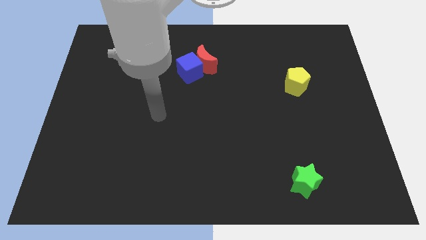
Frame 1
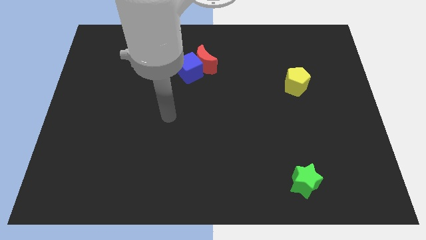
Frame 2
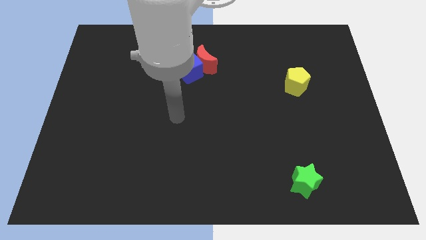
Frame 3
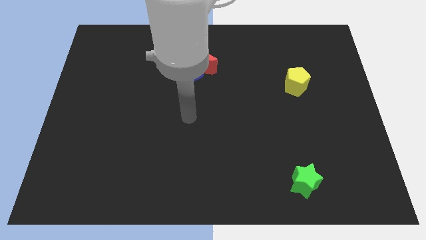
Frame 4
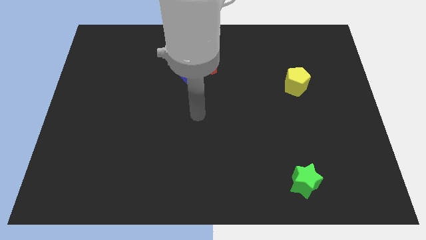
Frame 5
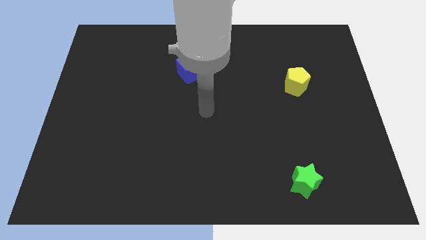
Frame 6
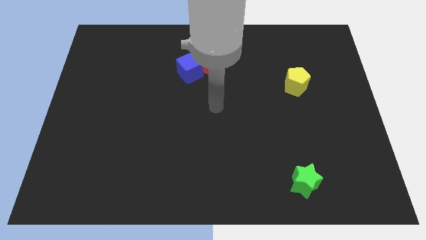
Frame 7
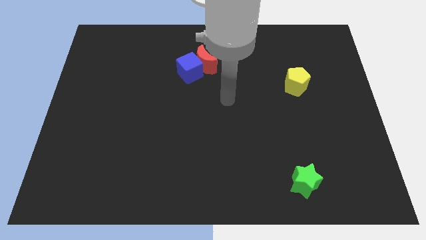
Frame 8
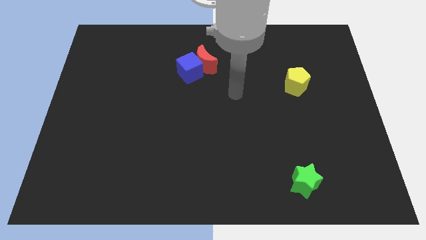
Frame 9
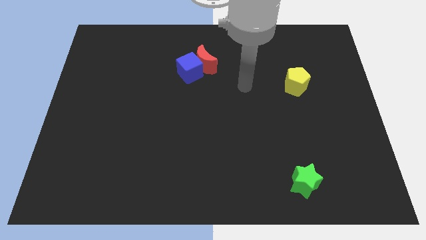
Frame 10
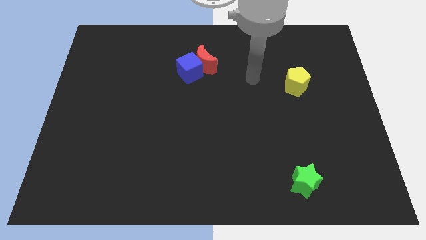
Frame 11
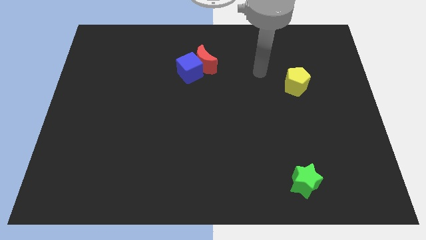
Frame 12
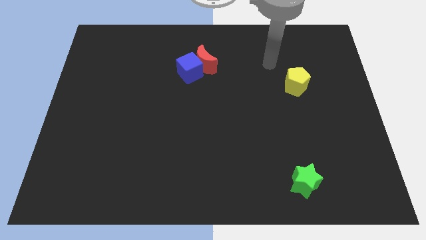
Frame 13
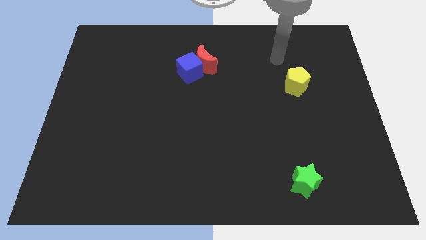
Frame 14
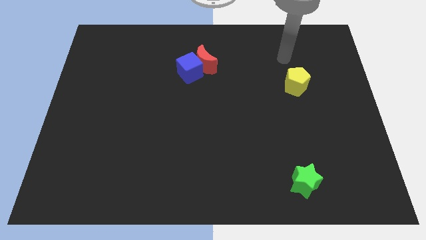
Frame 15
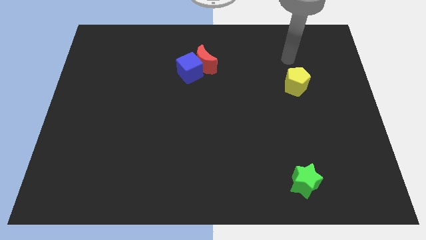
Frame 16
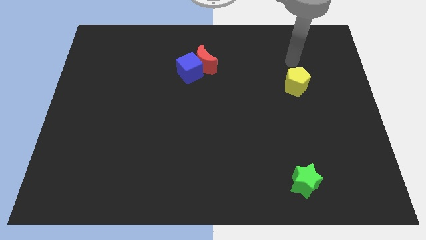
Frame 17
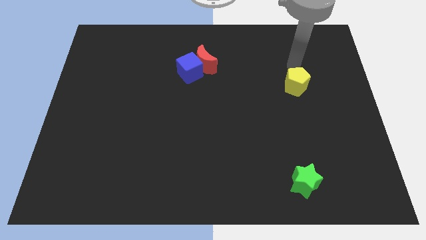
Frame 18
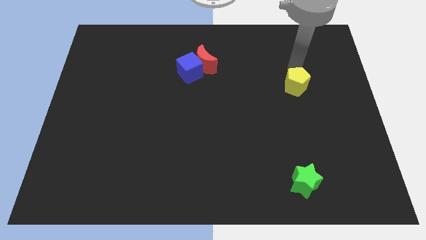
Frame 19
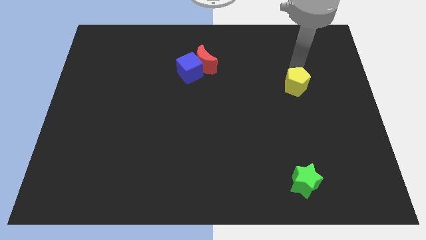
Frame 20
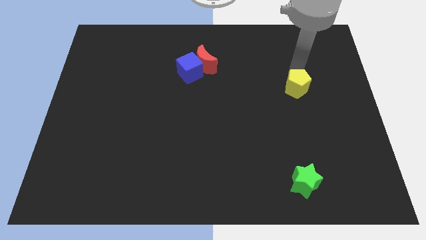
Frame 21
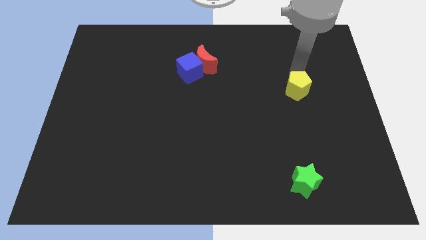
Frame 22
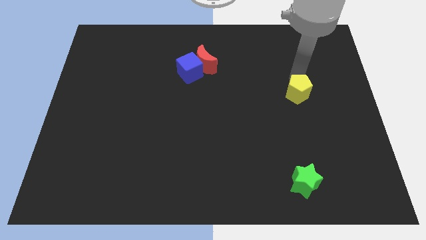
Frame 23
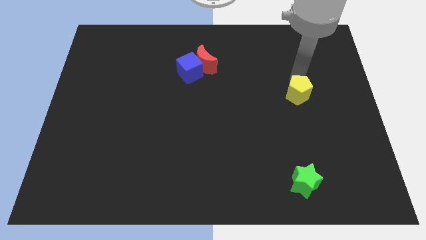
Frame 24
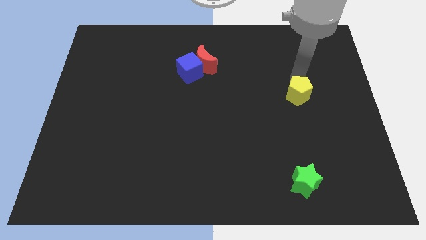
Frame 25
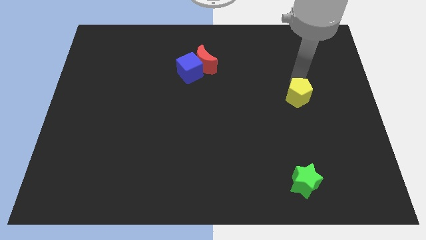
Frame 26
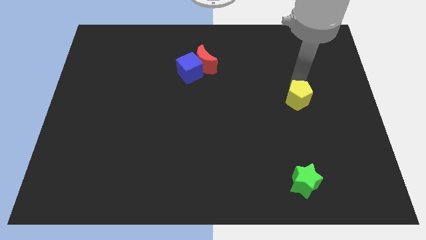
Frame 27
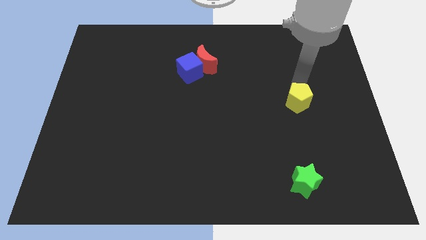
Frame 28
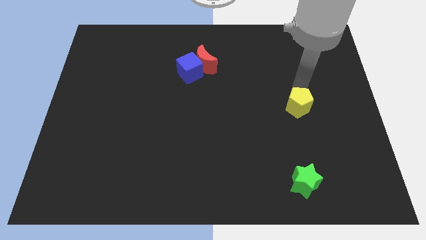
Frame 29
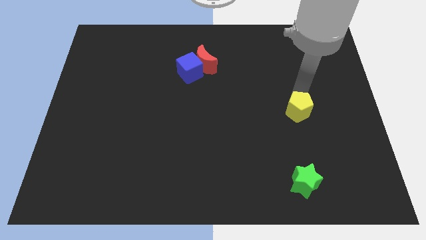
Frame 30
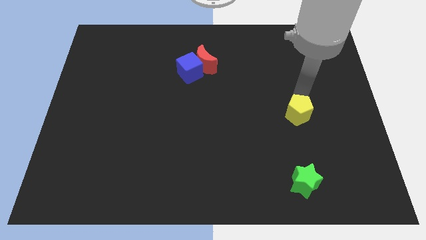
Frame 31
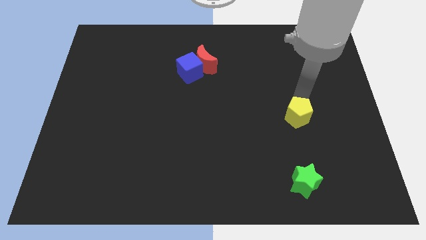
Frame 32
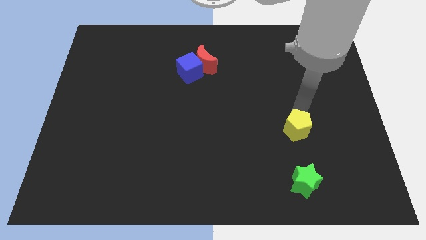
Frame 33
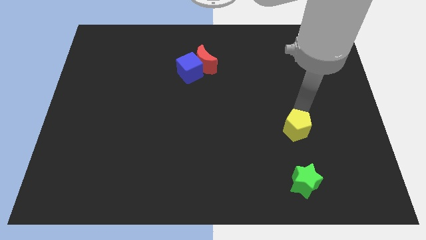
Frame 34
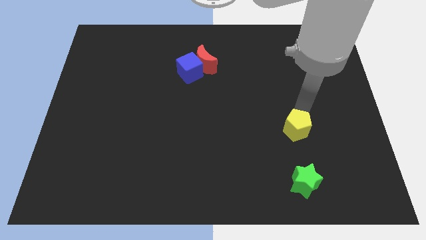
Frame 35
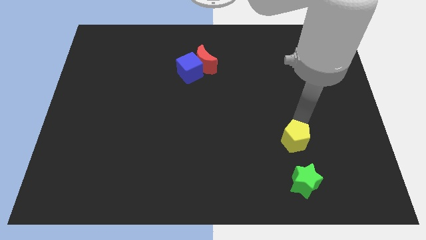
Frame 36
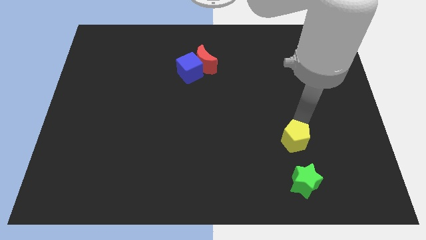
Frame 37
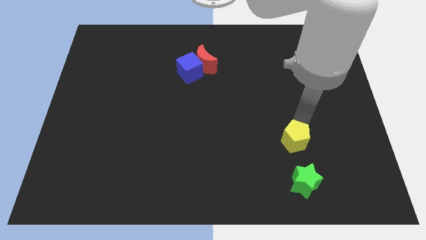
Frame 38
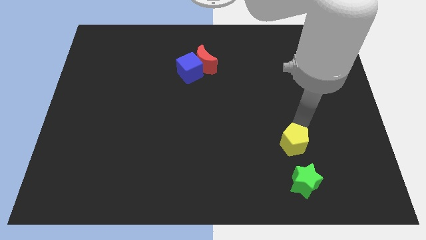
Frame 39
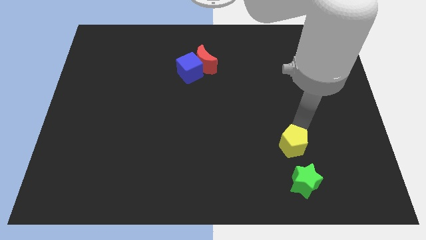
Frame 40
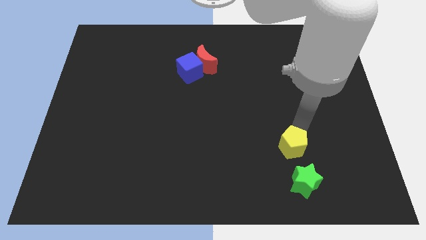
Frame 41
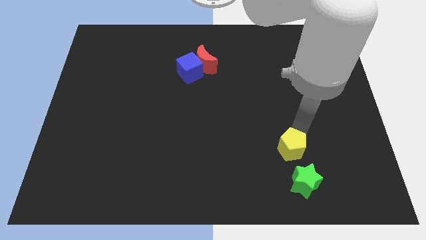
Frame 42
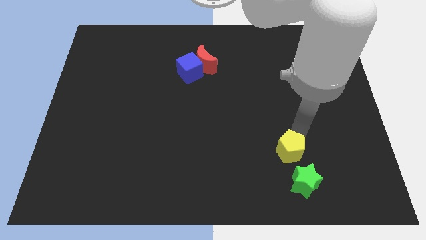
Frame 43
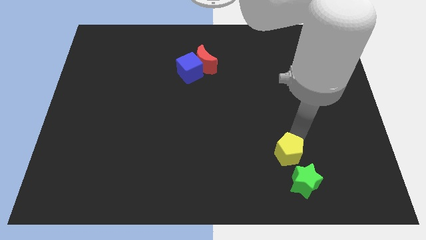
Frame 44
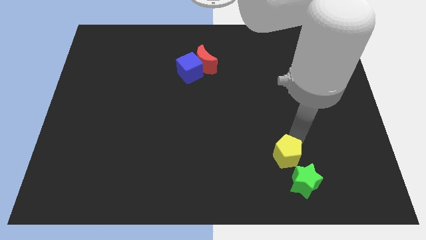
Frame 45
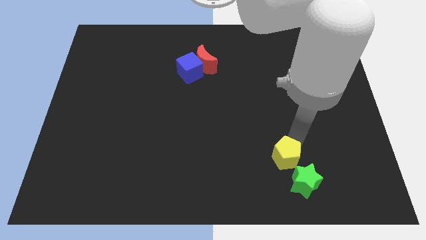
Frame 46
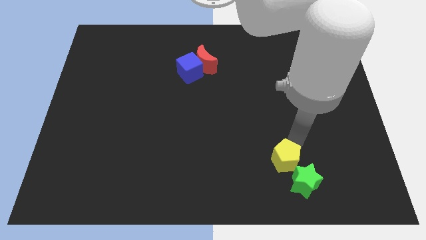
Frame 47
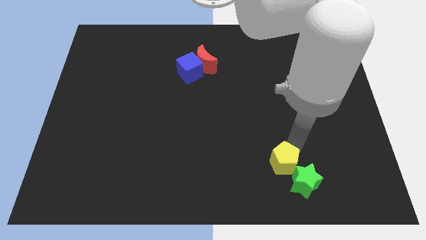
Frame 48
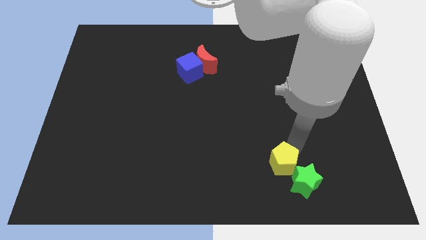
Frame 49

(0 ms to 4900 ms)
put the pentagon close to the green block

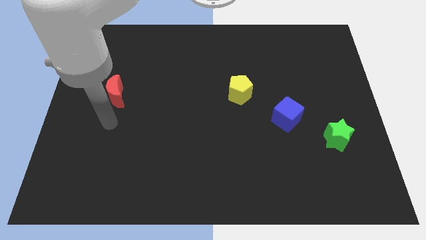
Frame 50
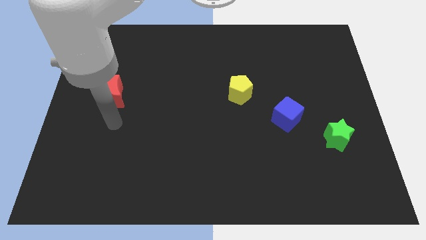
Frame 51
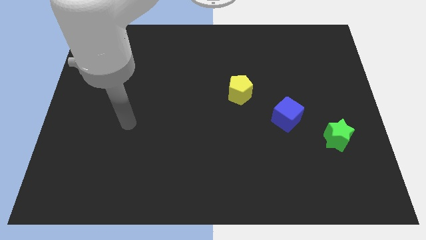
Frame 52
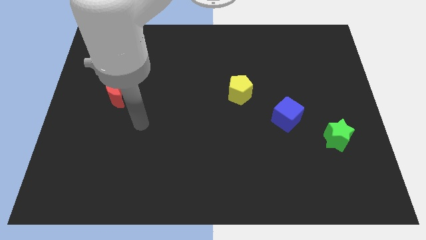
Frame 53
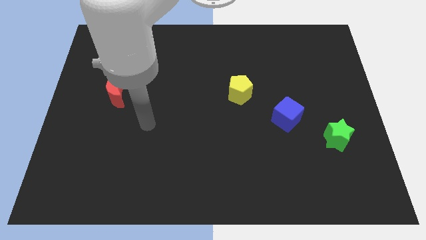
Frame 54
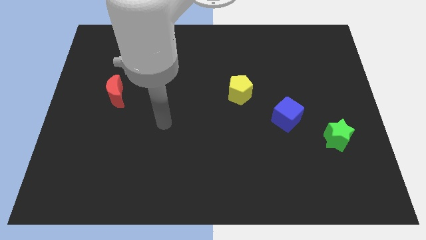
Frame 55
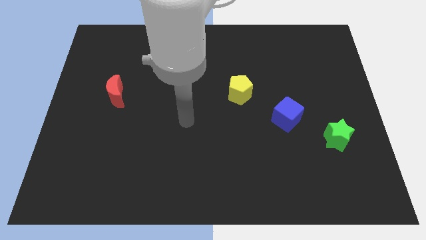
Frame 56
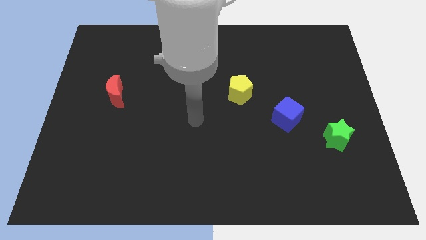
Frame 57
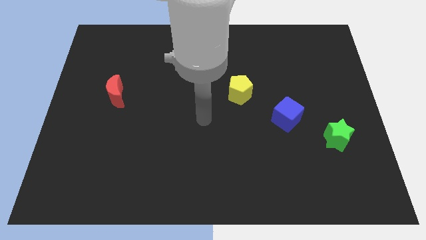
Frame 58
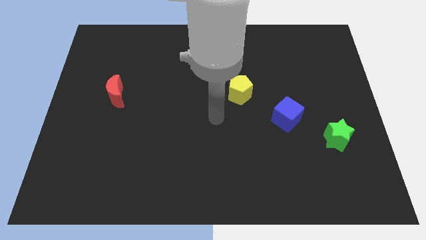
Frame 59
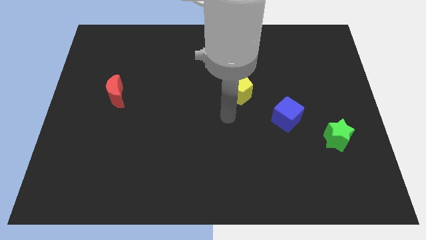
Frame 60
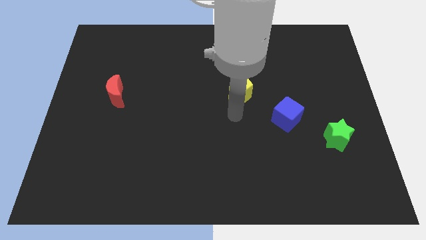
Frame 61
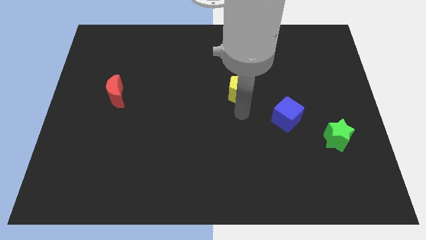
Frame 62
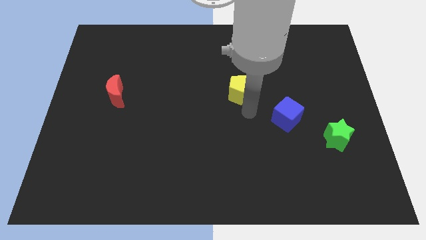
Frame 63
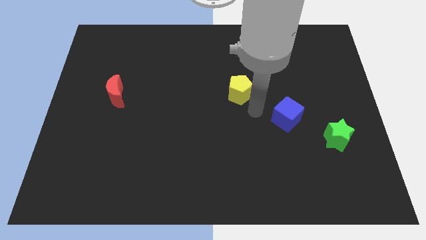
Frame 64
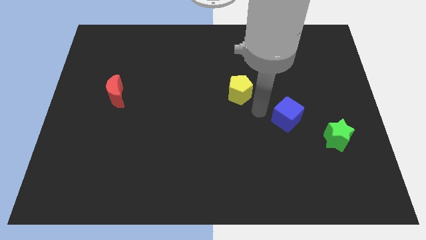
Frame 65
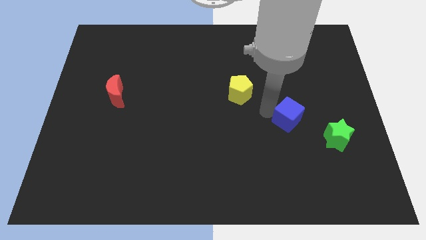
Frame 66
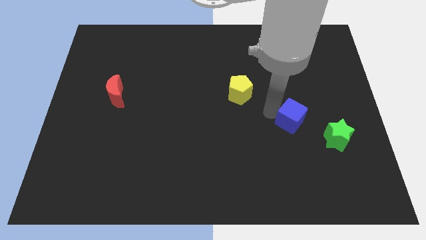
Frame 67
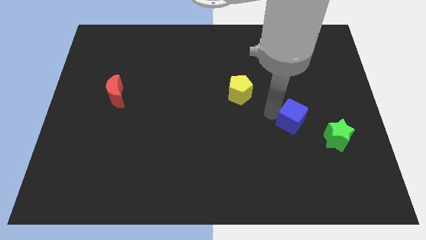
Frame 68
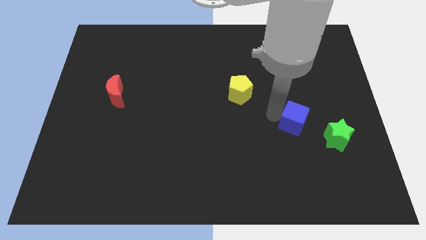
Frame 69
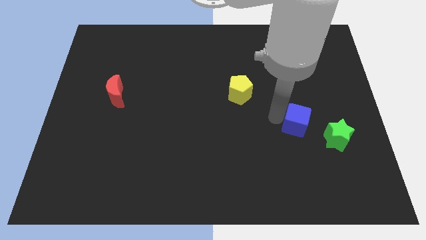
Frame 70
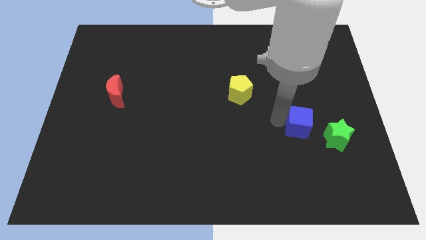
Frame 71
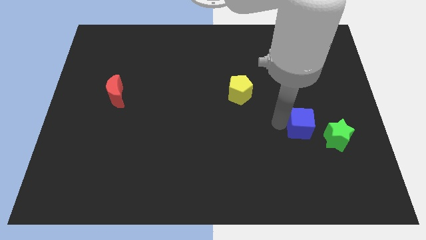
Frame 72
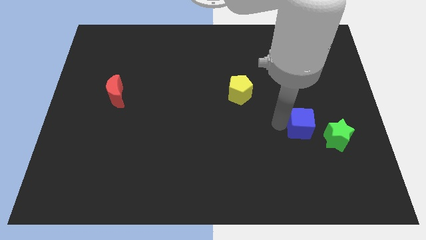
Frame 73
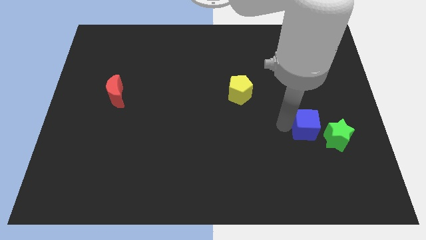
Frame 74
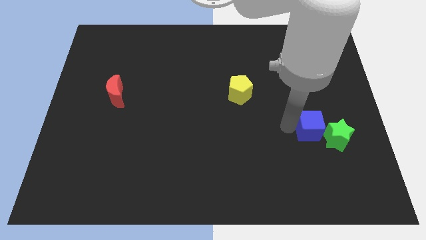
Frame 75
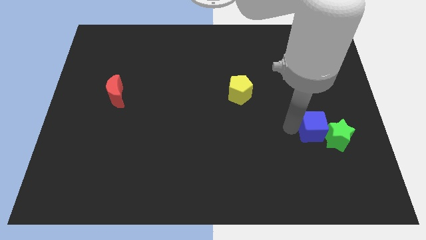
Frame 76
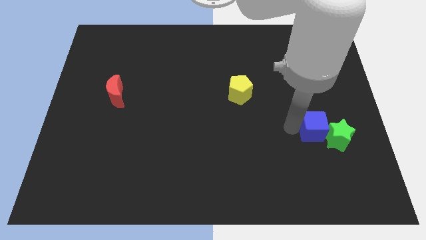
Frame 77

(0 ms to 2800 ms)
push the cube close to the green star

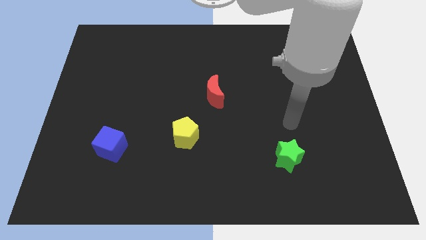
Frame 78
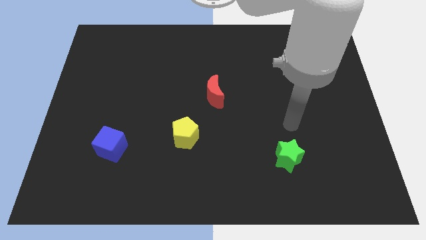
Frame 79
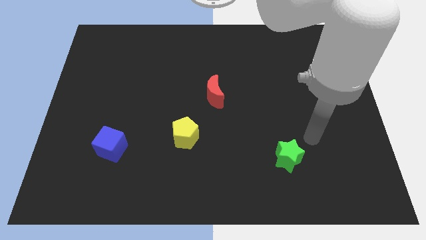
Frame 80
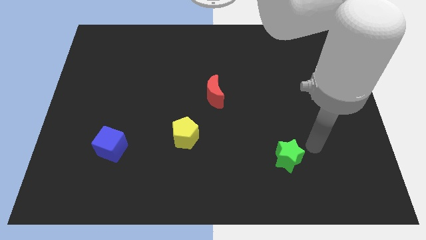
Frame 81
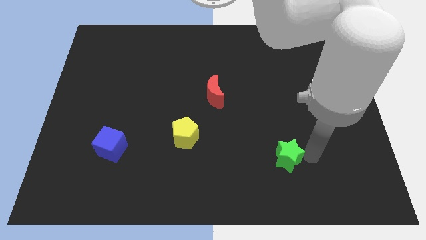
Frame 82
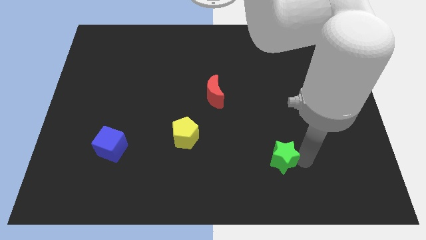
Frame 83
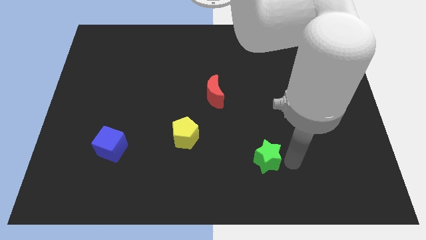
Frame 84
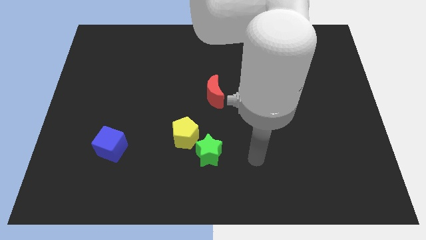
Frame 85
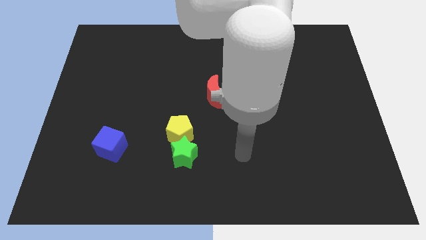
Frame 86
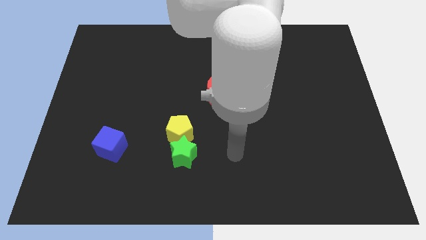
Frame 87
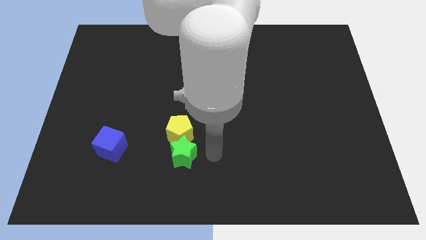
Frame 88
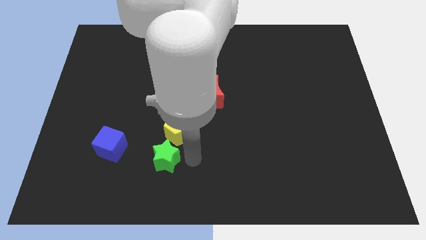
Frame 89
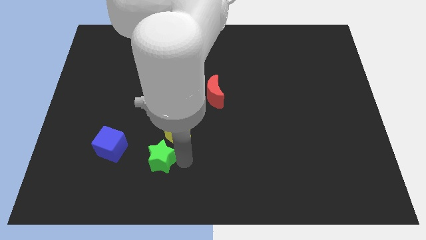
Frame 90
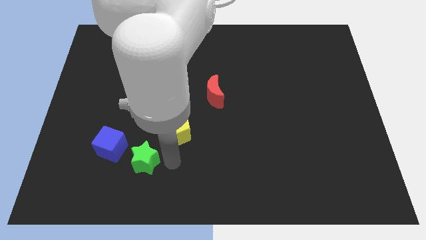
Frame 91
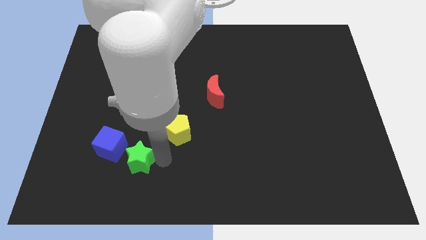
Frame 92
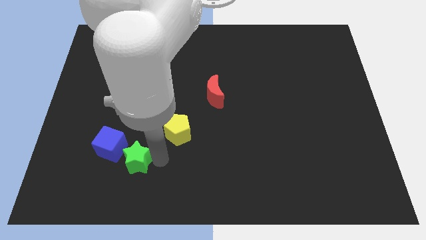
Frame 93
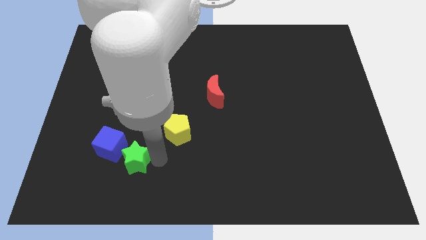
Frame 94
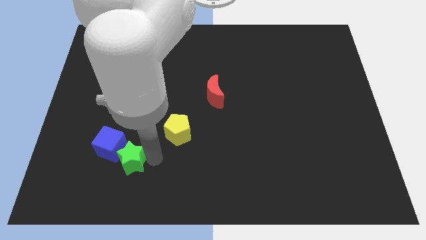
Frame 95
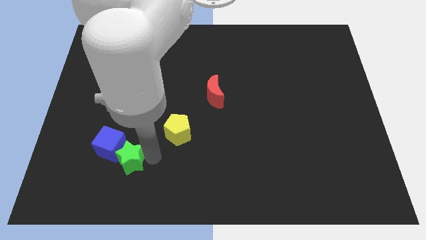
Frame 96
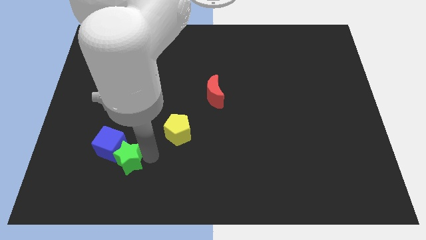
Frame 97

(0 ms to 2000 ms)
slide the star close to the blue cube
